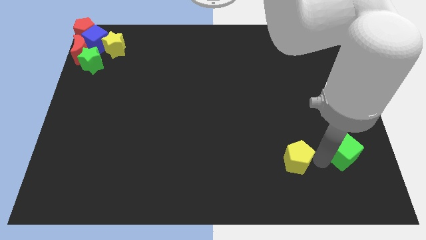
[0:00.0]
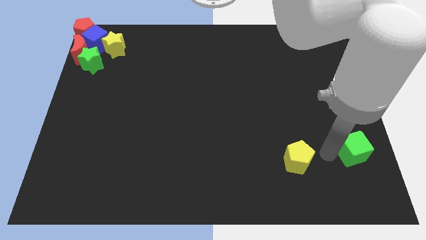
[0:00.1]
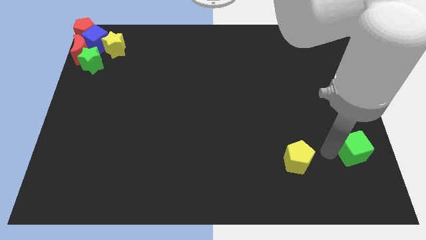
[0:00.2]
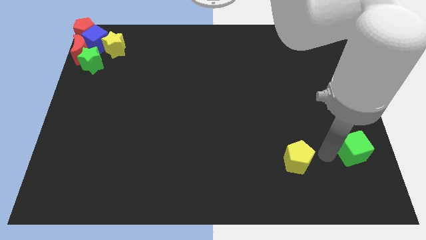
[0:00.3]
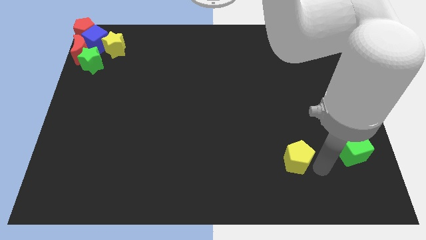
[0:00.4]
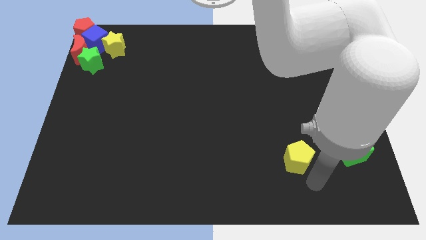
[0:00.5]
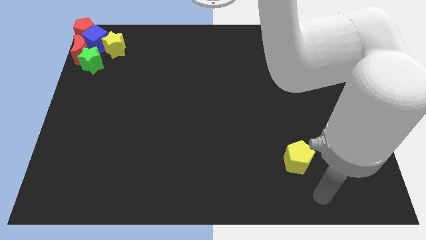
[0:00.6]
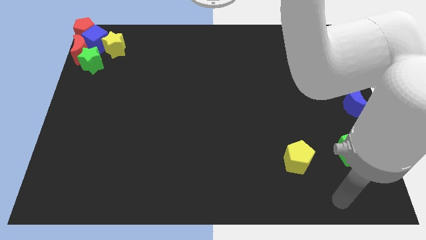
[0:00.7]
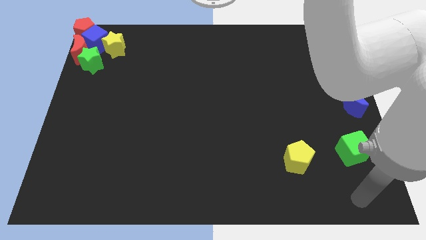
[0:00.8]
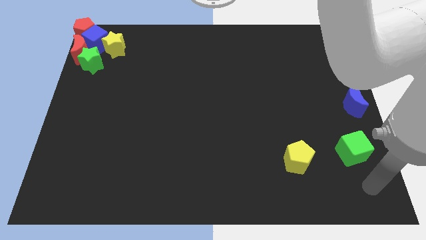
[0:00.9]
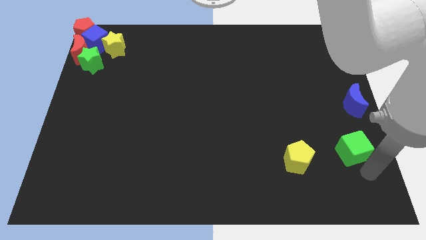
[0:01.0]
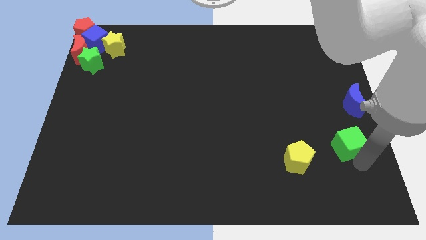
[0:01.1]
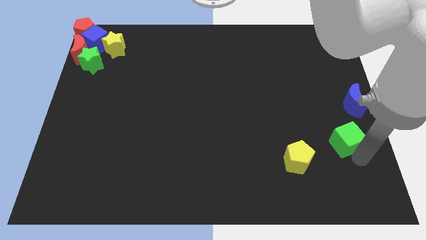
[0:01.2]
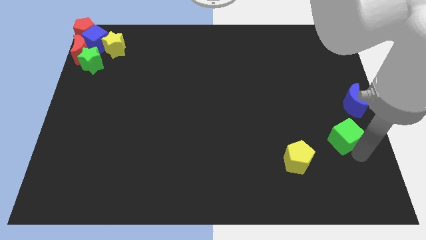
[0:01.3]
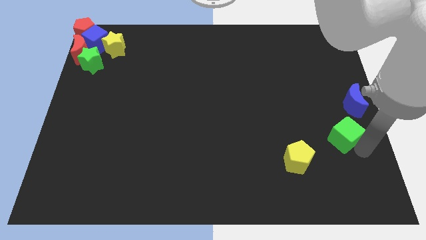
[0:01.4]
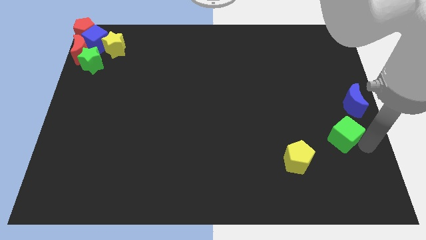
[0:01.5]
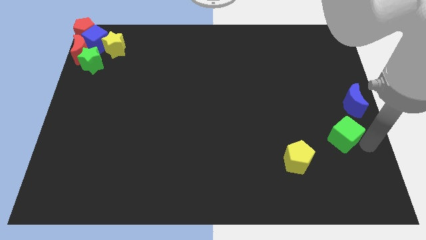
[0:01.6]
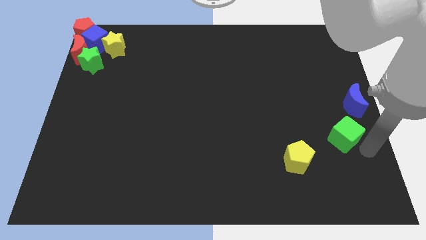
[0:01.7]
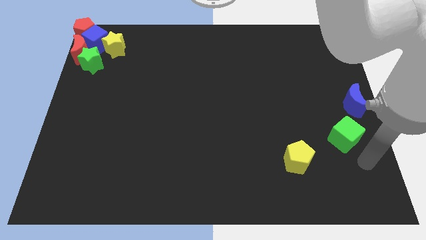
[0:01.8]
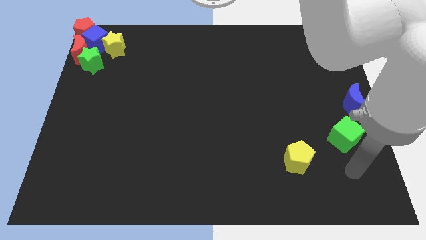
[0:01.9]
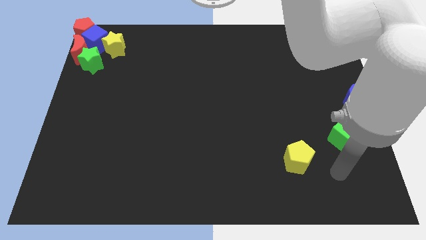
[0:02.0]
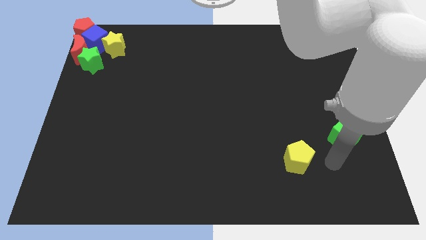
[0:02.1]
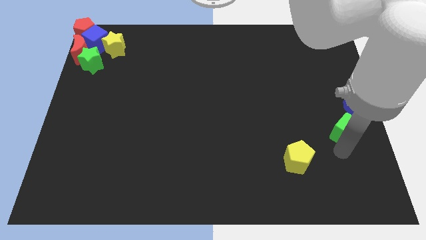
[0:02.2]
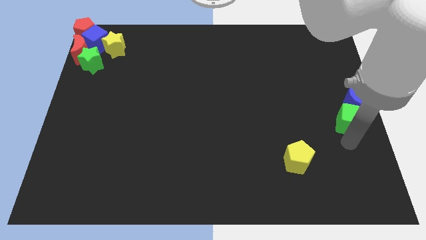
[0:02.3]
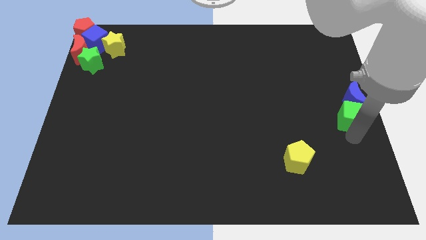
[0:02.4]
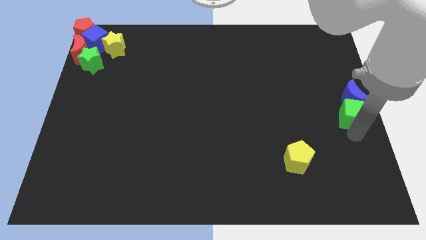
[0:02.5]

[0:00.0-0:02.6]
push the green cube into the blue crescent

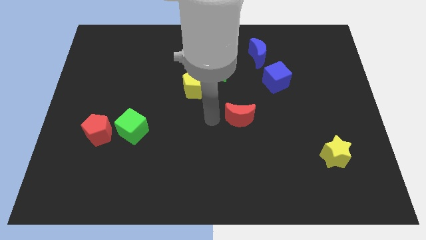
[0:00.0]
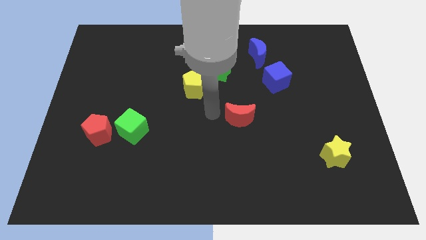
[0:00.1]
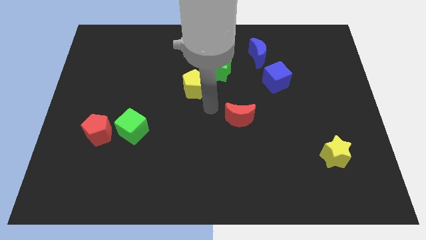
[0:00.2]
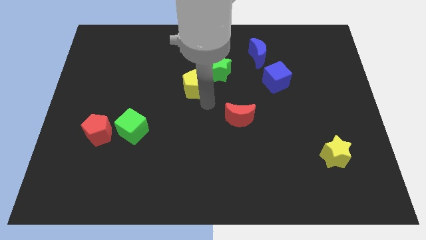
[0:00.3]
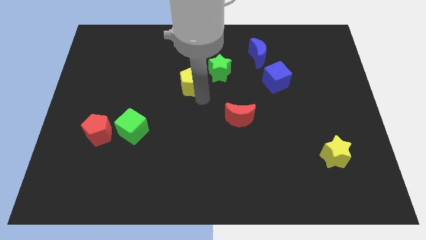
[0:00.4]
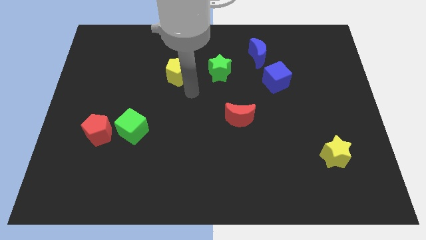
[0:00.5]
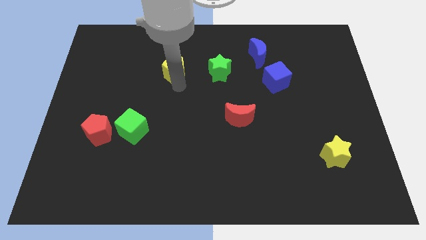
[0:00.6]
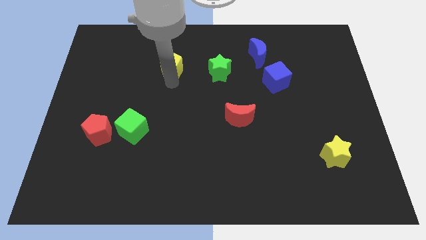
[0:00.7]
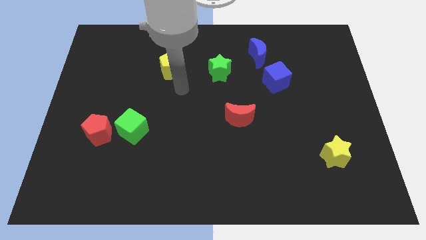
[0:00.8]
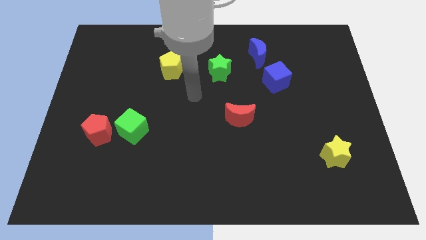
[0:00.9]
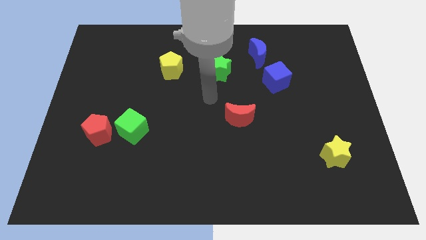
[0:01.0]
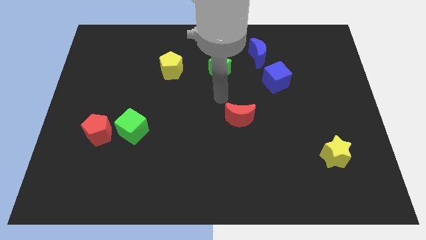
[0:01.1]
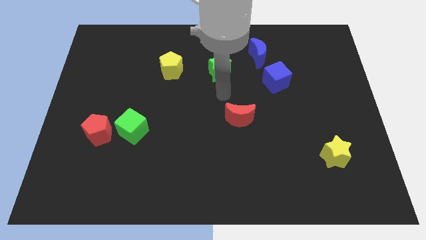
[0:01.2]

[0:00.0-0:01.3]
push the yellow pentagon to the top center

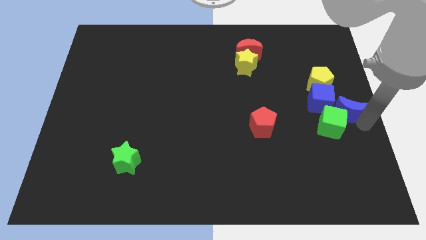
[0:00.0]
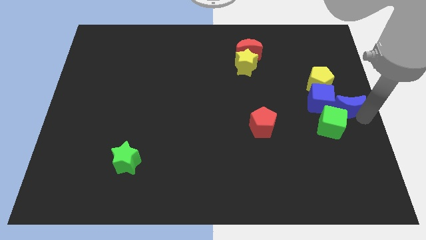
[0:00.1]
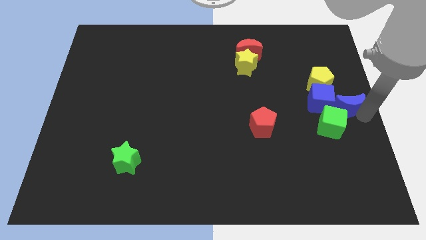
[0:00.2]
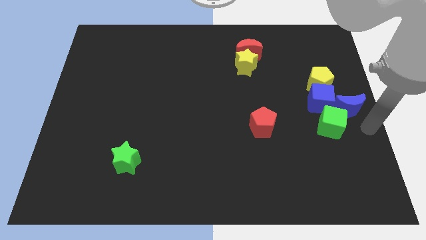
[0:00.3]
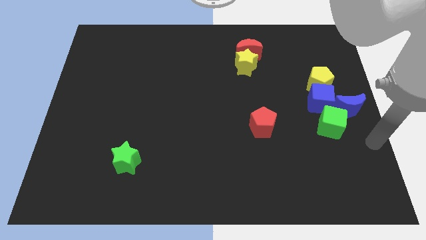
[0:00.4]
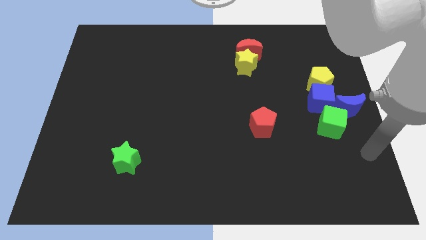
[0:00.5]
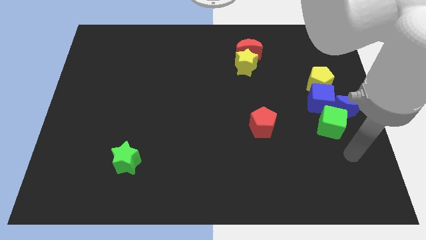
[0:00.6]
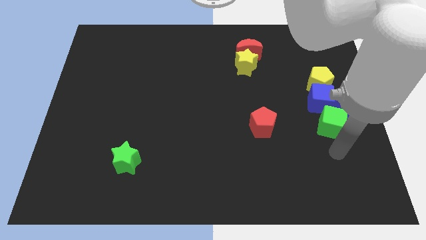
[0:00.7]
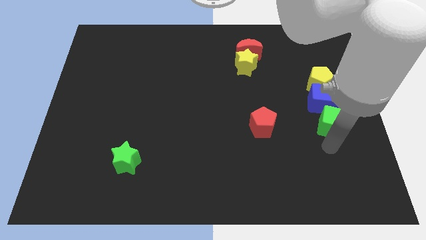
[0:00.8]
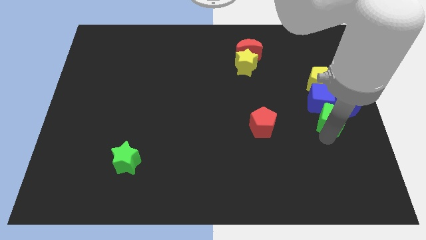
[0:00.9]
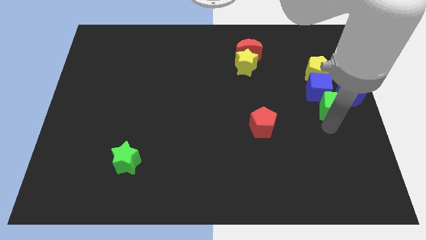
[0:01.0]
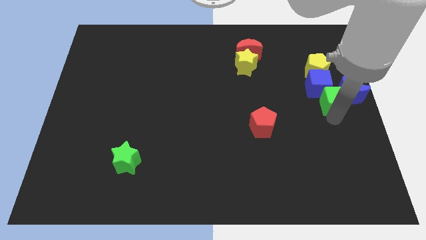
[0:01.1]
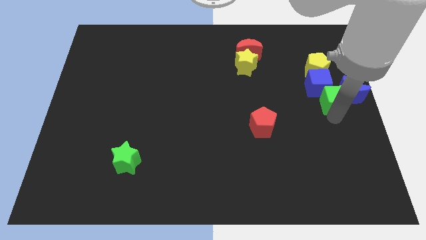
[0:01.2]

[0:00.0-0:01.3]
slightly push the green cube into the blue cube and blue crescent

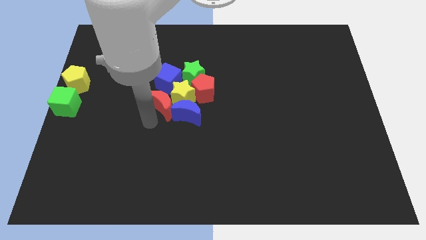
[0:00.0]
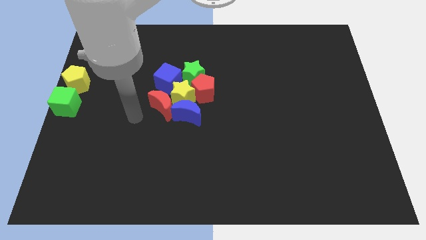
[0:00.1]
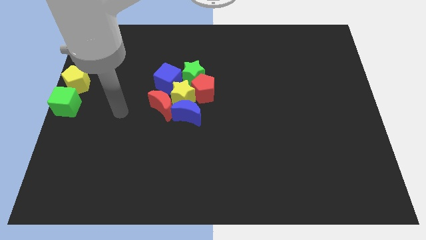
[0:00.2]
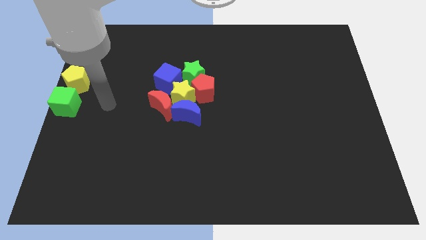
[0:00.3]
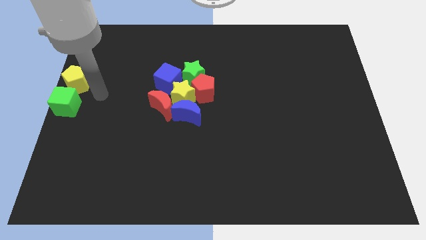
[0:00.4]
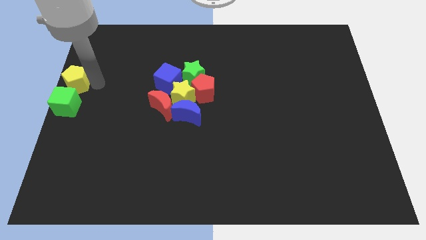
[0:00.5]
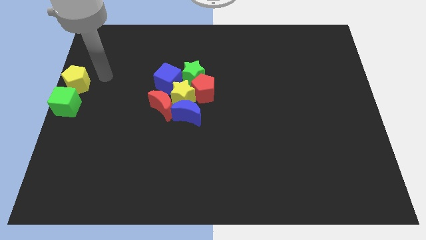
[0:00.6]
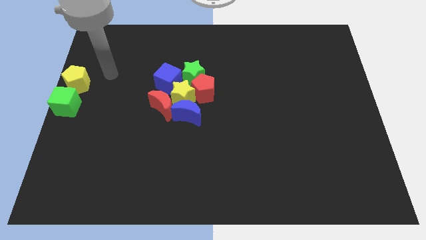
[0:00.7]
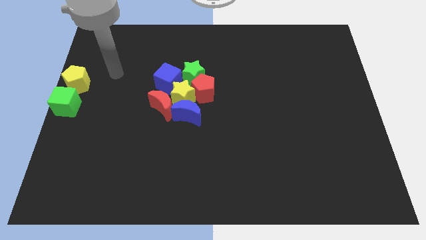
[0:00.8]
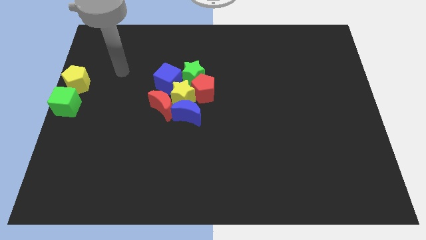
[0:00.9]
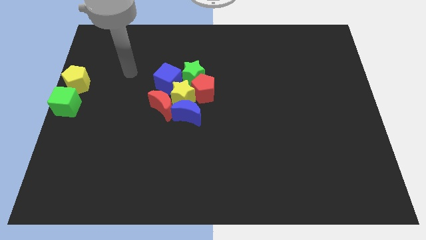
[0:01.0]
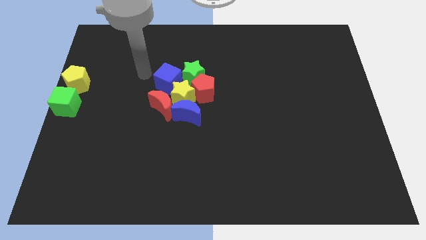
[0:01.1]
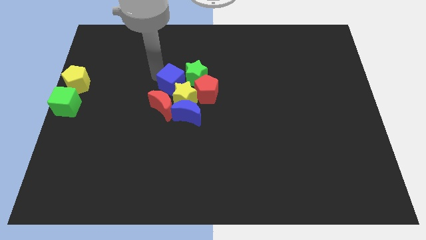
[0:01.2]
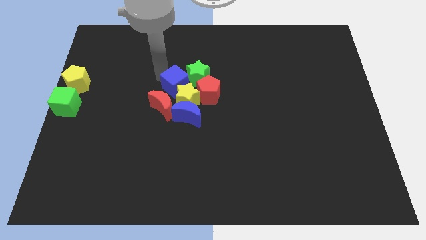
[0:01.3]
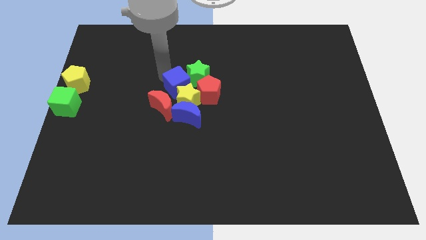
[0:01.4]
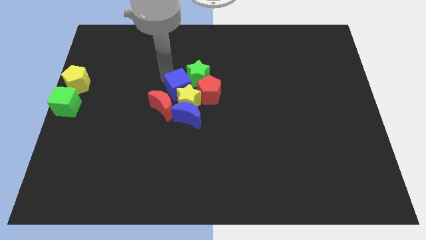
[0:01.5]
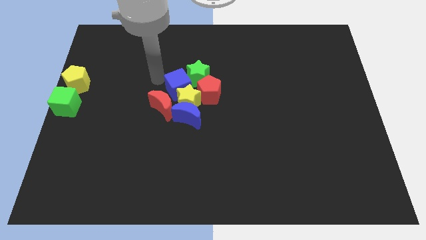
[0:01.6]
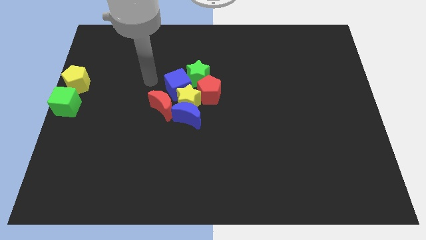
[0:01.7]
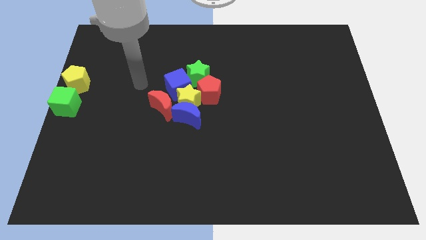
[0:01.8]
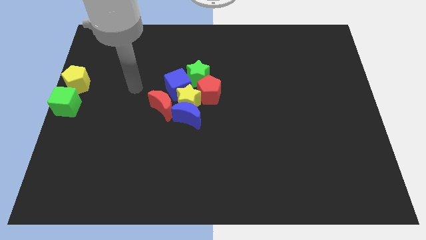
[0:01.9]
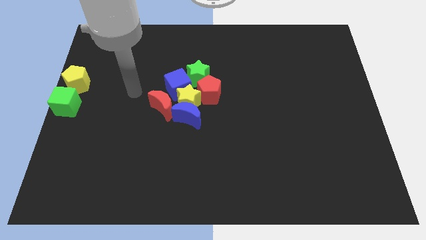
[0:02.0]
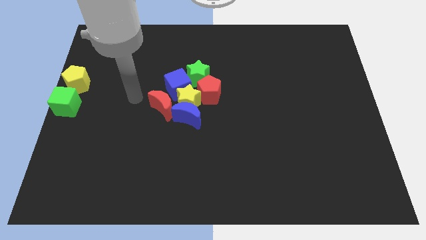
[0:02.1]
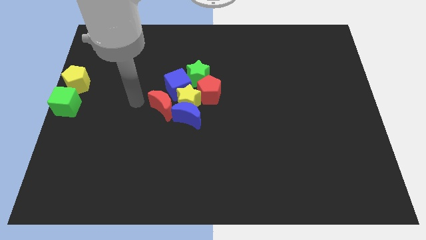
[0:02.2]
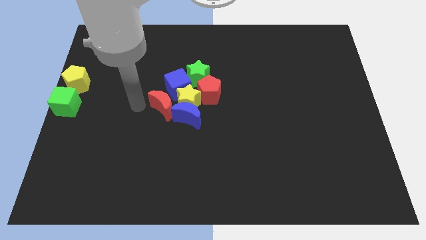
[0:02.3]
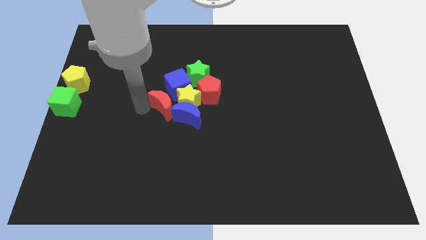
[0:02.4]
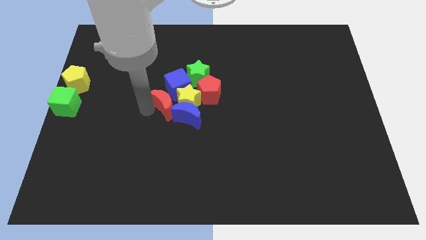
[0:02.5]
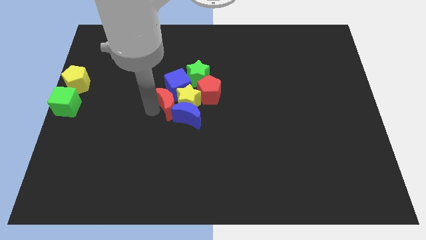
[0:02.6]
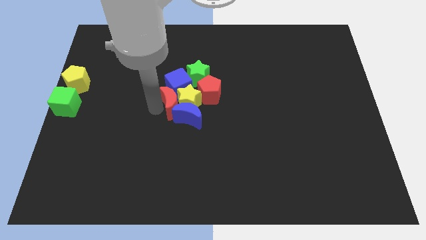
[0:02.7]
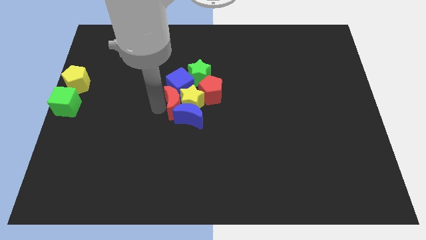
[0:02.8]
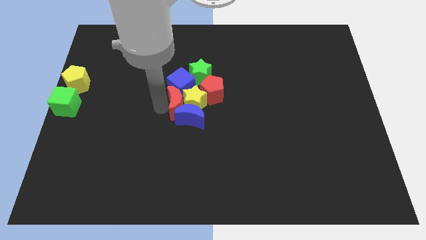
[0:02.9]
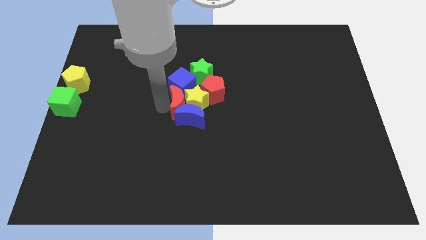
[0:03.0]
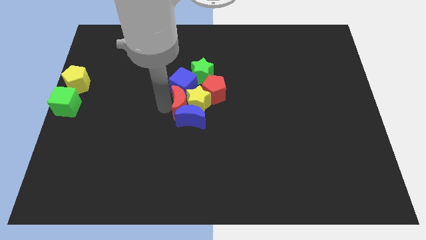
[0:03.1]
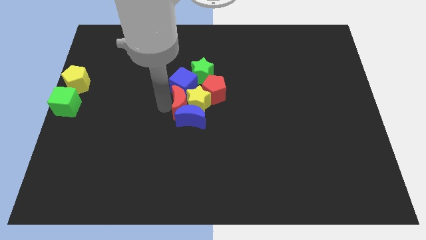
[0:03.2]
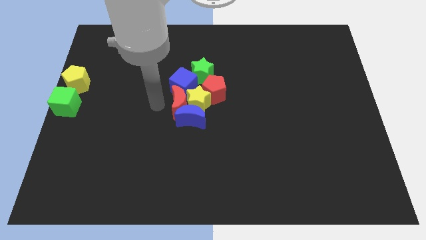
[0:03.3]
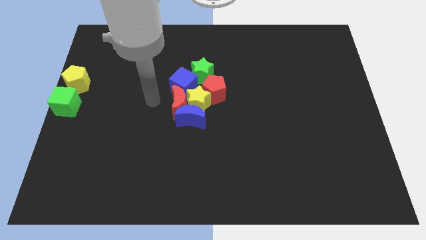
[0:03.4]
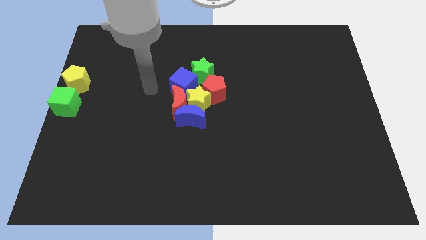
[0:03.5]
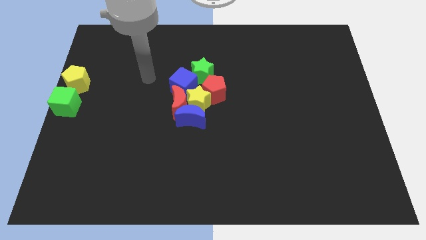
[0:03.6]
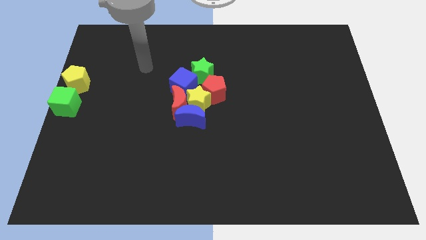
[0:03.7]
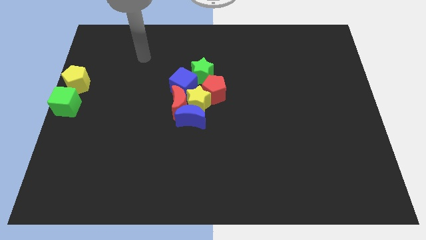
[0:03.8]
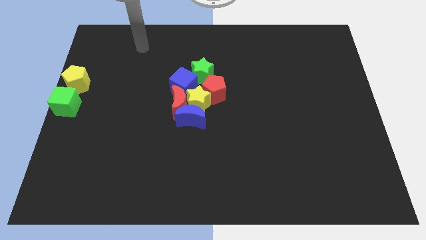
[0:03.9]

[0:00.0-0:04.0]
adjust the red crescent and blue cube into group of blocks
